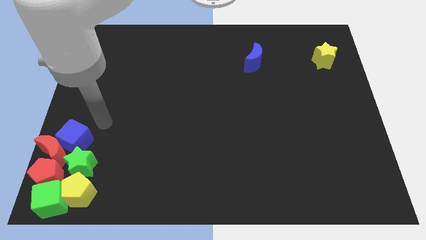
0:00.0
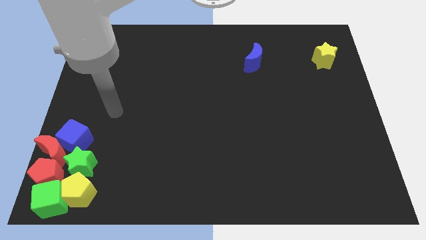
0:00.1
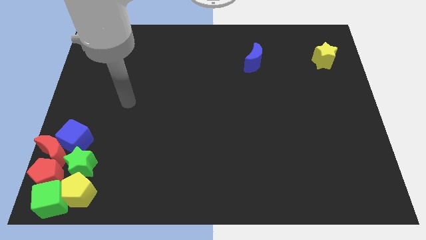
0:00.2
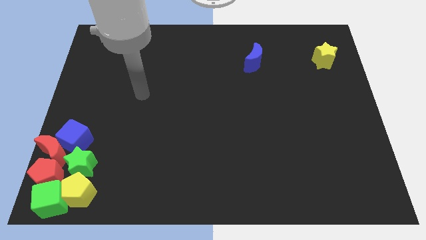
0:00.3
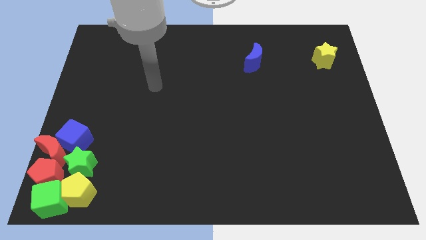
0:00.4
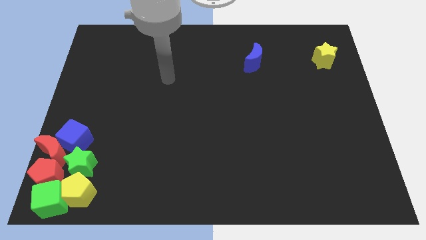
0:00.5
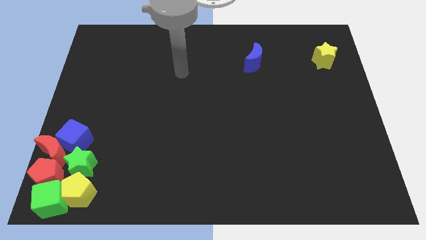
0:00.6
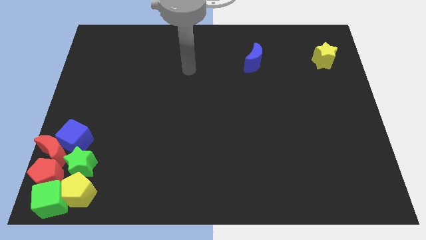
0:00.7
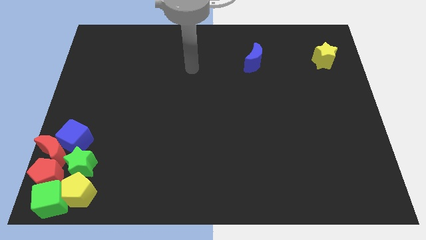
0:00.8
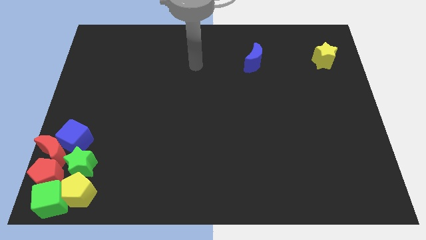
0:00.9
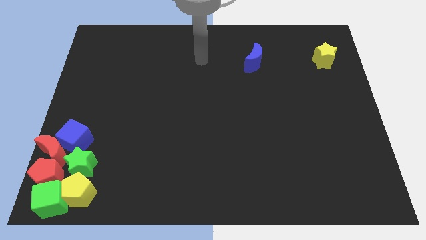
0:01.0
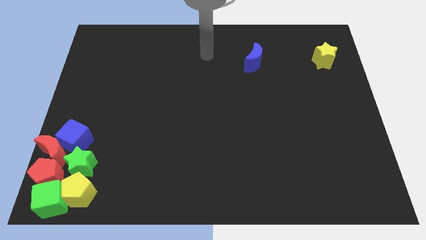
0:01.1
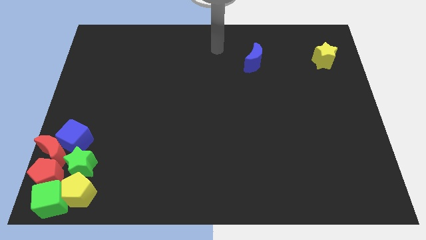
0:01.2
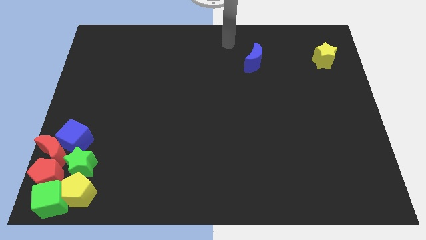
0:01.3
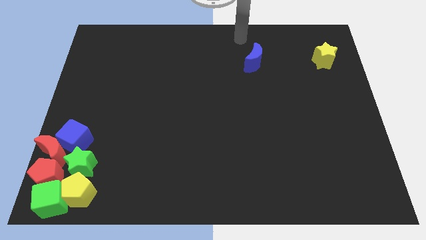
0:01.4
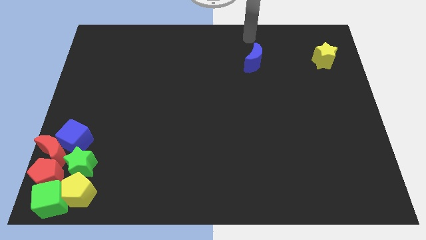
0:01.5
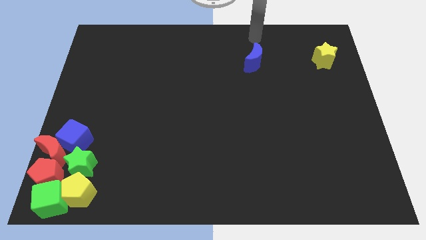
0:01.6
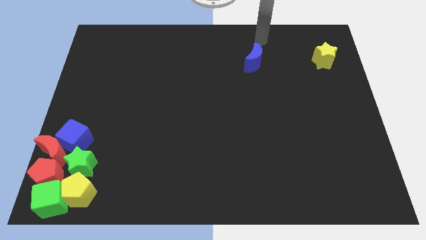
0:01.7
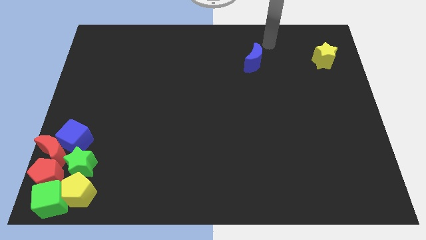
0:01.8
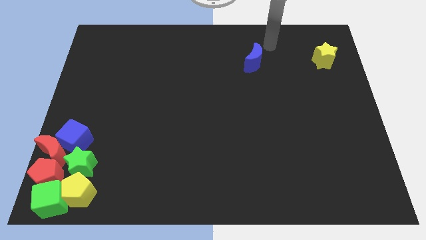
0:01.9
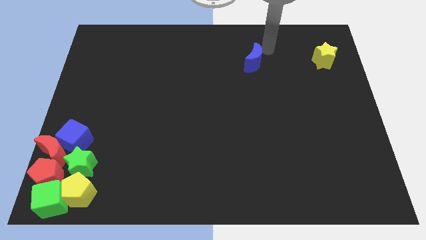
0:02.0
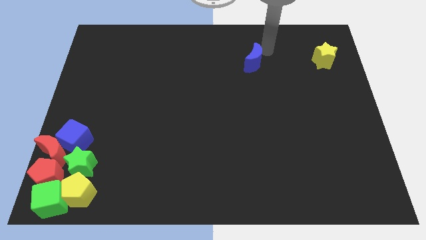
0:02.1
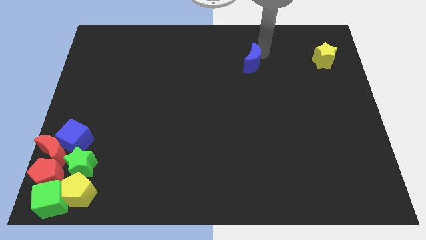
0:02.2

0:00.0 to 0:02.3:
move your arm towards the blue crecsent

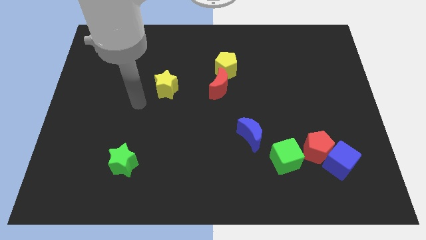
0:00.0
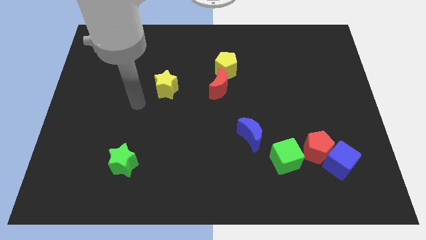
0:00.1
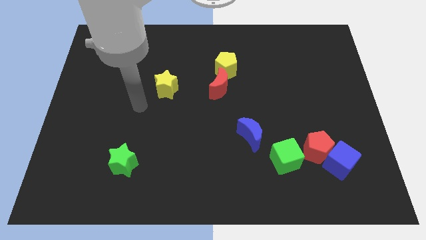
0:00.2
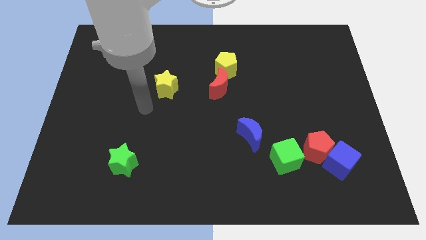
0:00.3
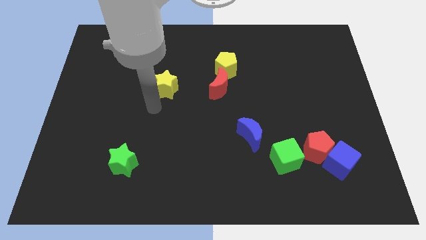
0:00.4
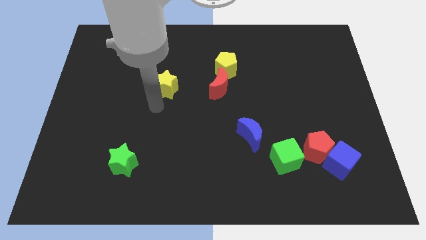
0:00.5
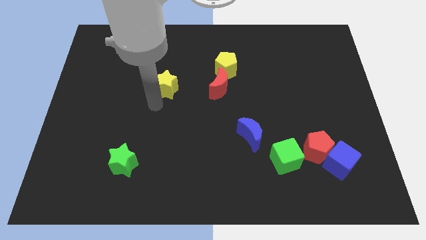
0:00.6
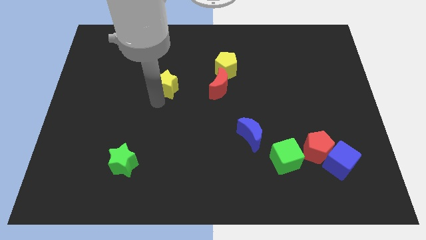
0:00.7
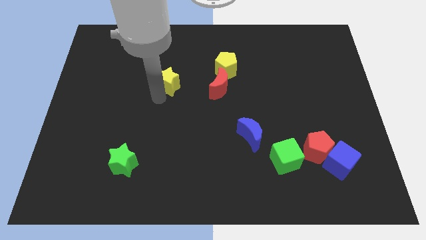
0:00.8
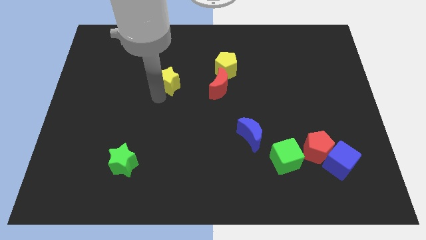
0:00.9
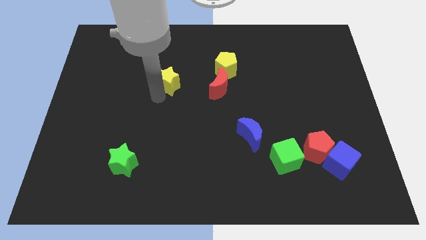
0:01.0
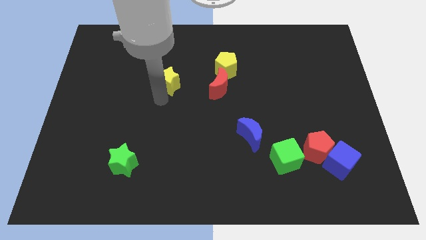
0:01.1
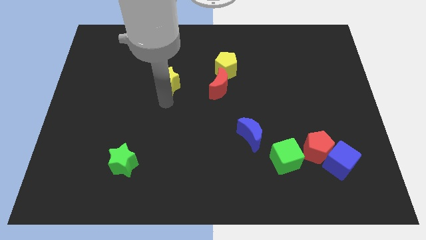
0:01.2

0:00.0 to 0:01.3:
touch the yellow star

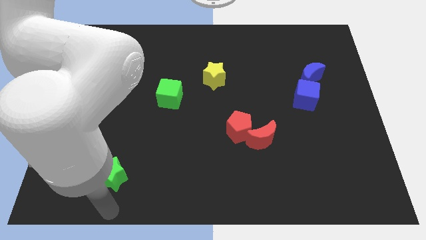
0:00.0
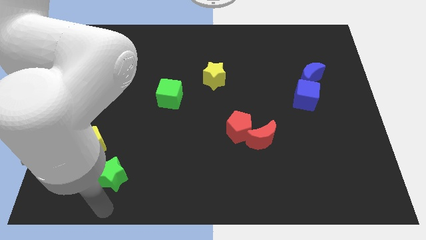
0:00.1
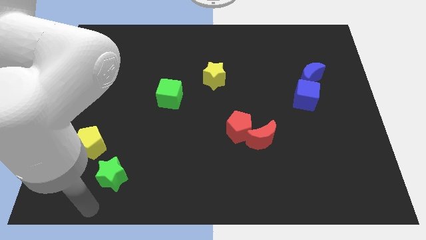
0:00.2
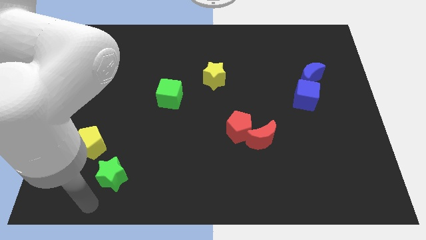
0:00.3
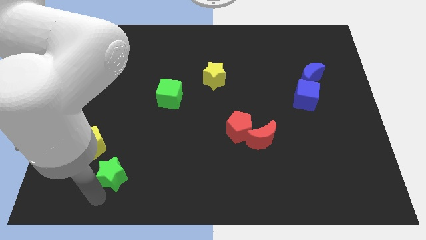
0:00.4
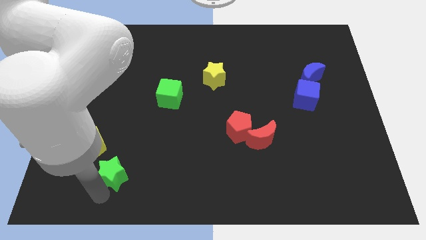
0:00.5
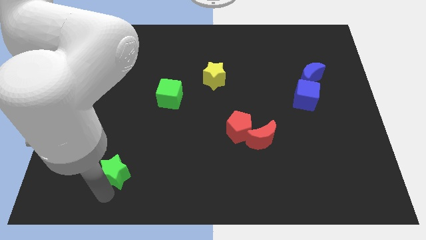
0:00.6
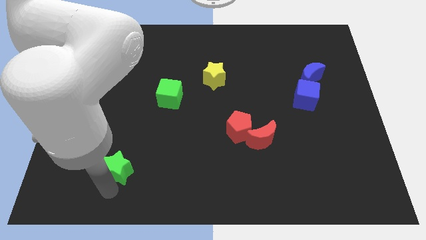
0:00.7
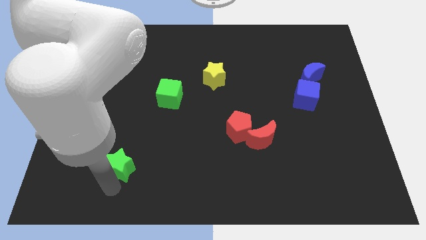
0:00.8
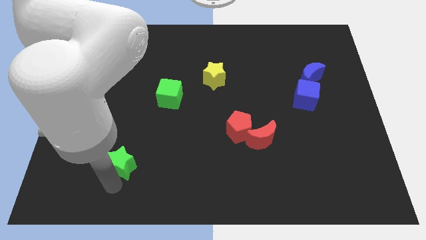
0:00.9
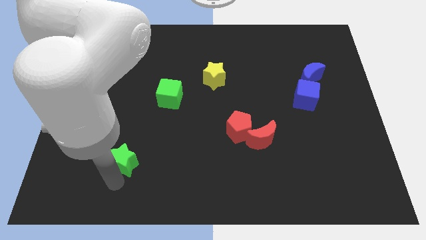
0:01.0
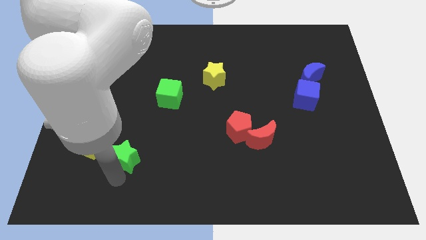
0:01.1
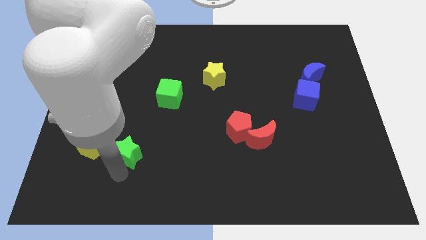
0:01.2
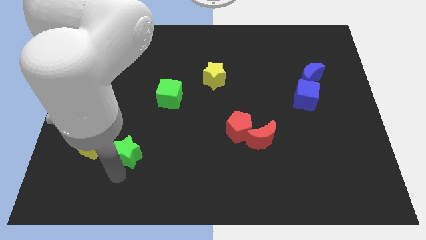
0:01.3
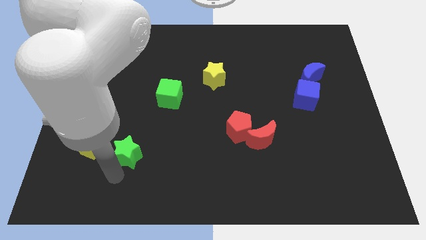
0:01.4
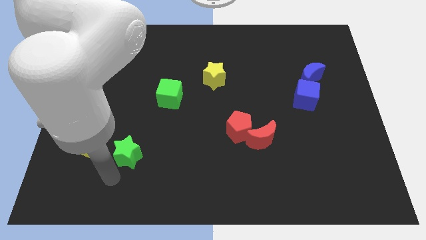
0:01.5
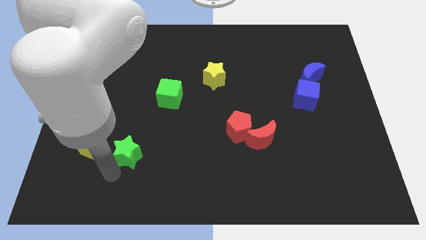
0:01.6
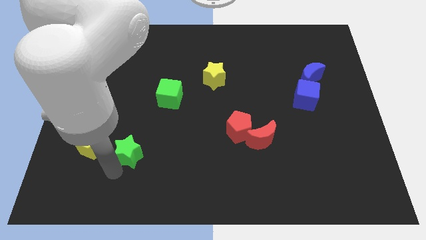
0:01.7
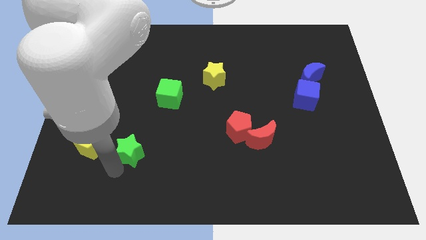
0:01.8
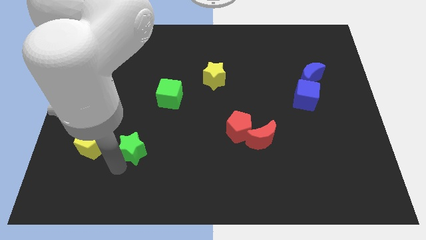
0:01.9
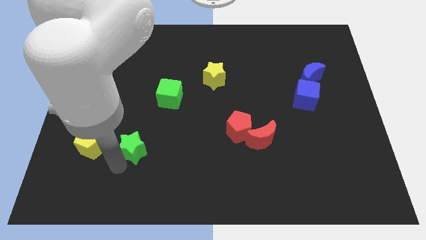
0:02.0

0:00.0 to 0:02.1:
move the green cube diagonal to the right of the yellow pentagon

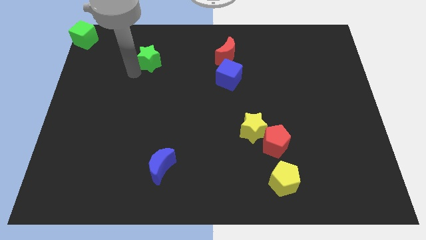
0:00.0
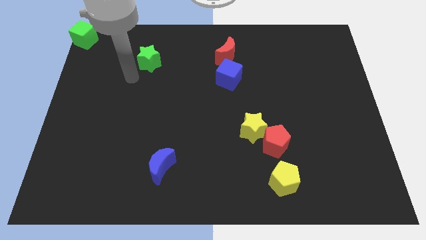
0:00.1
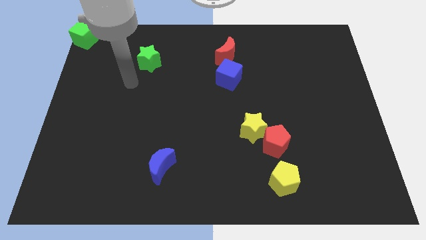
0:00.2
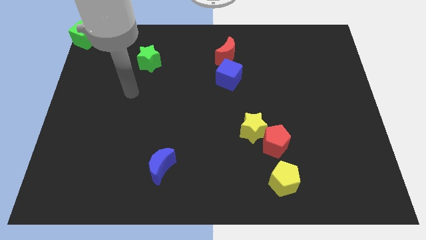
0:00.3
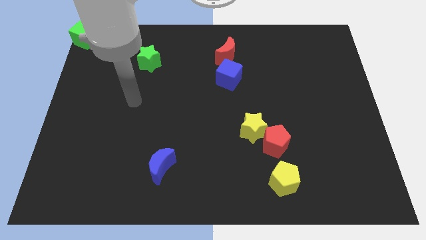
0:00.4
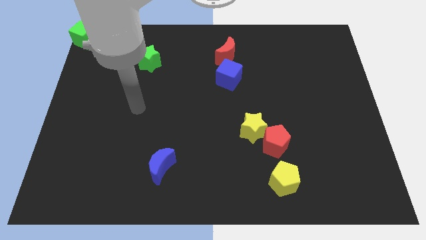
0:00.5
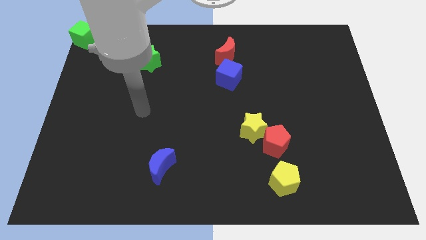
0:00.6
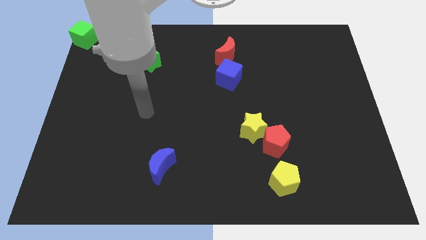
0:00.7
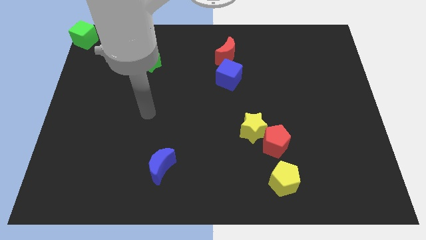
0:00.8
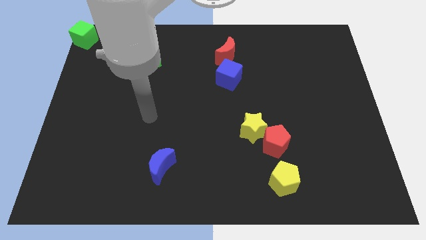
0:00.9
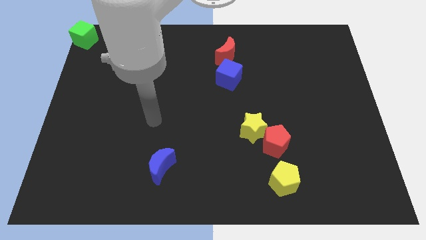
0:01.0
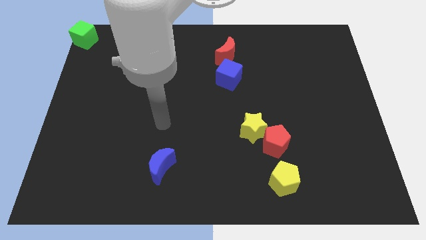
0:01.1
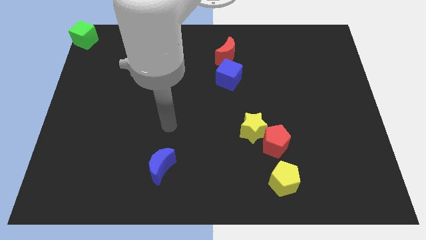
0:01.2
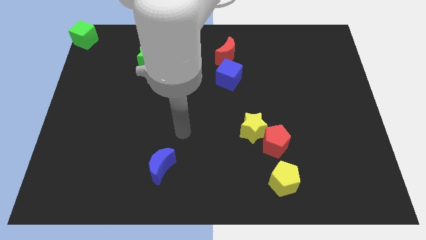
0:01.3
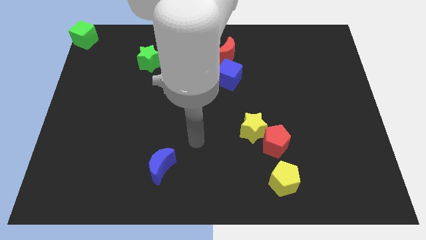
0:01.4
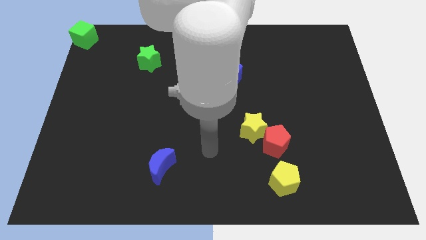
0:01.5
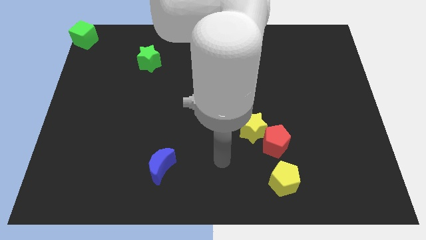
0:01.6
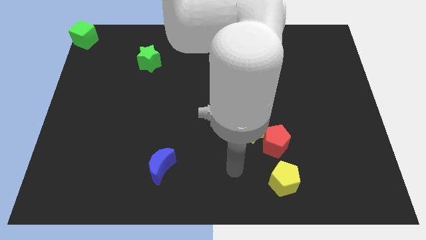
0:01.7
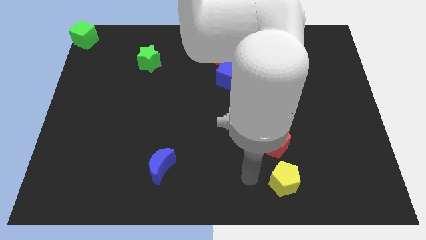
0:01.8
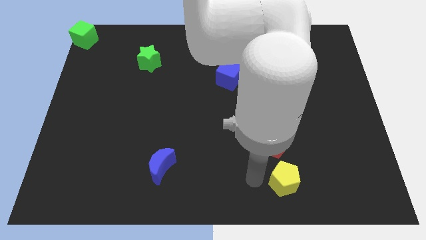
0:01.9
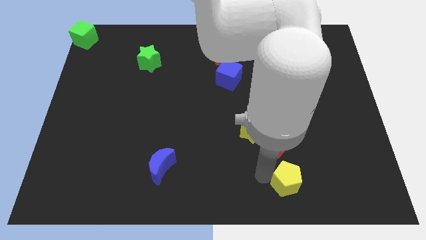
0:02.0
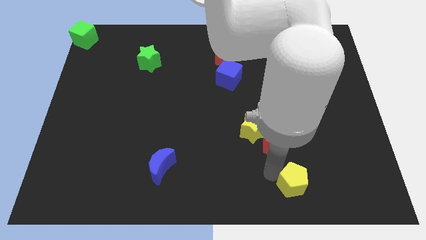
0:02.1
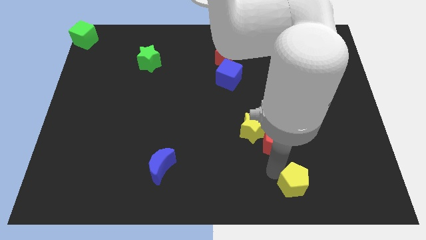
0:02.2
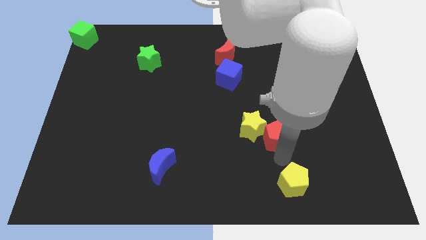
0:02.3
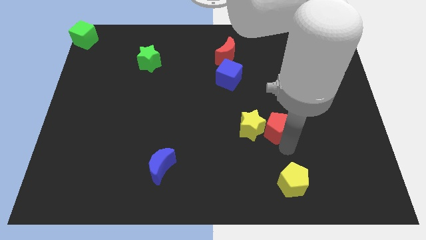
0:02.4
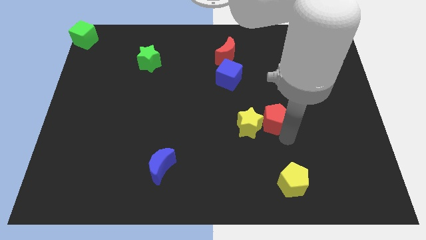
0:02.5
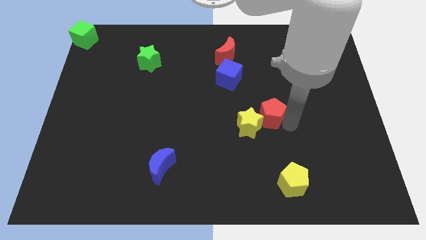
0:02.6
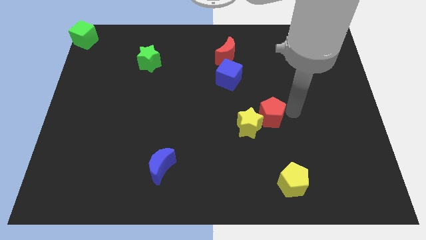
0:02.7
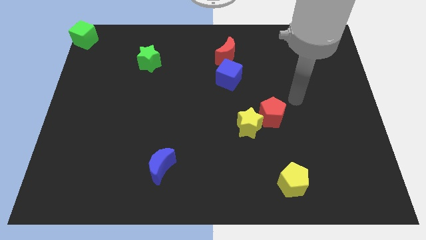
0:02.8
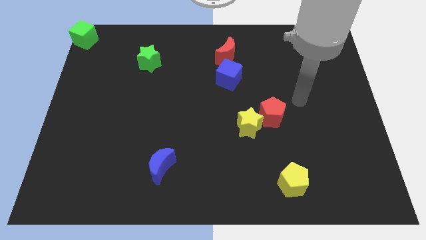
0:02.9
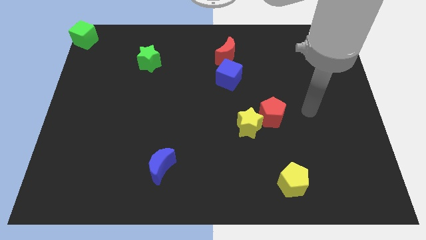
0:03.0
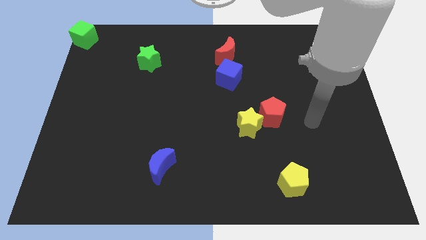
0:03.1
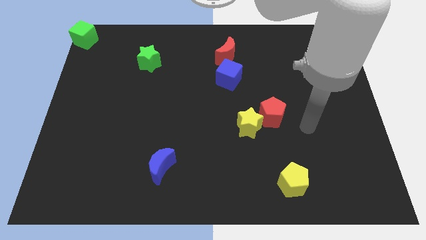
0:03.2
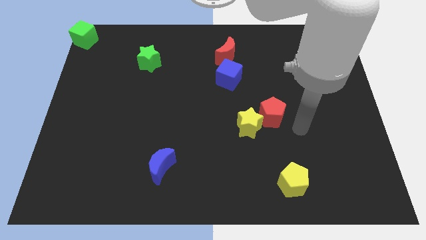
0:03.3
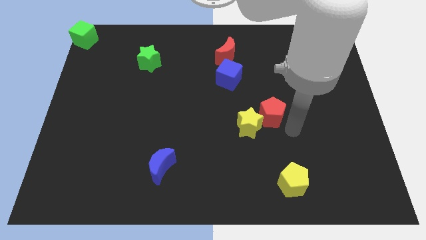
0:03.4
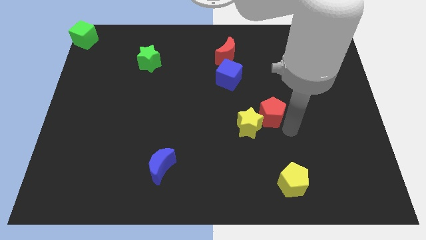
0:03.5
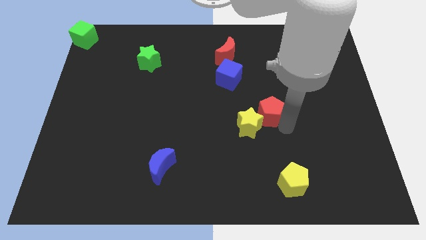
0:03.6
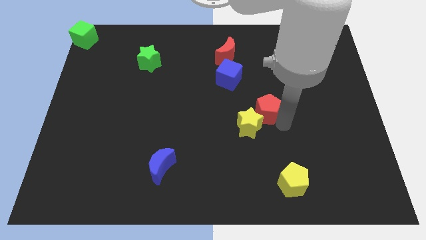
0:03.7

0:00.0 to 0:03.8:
place the red pentagon to the diagonal up right of yellow star
